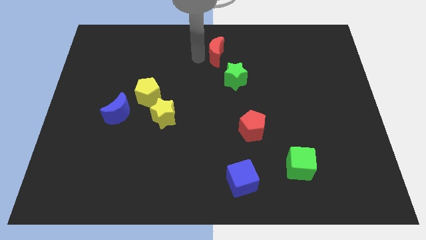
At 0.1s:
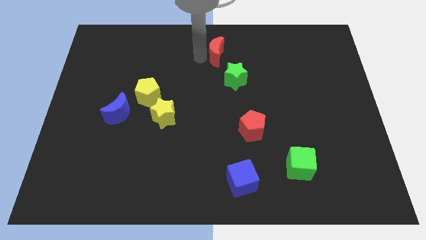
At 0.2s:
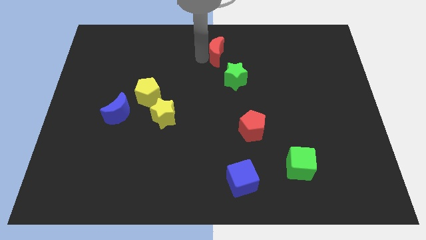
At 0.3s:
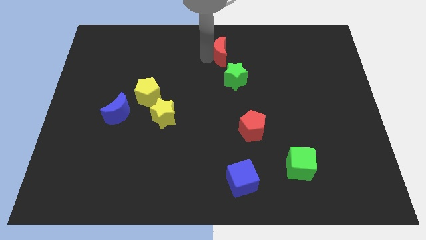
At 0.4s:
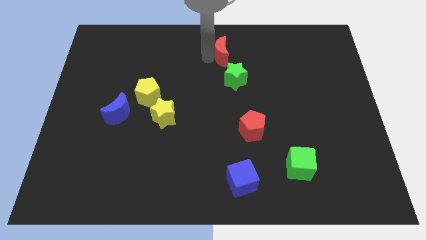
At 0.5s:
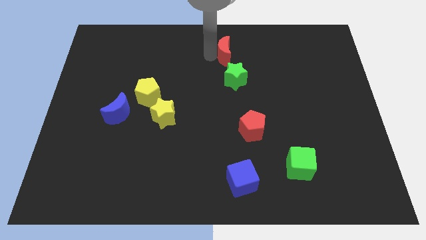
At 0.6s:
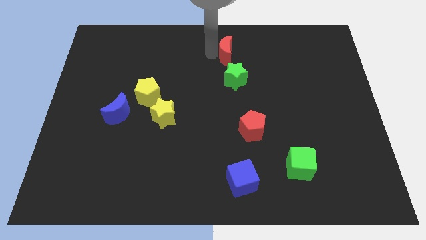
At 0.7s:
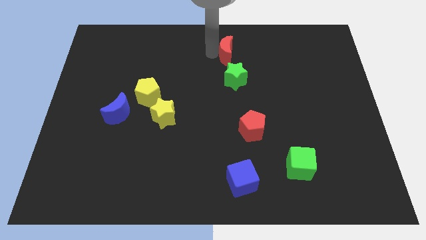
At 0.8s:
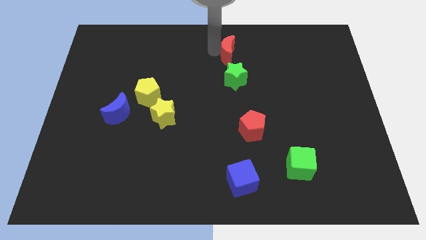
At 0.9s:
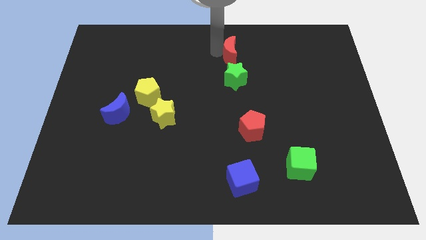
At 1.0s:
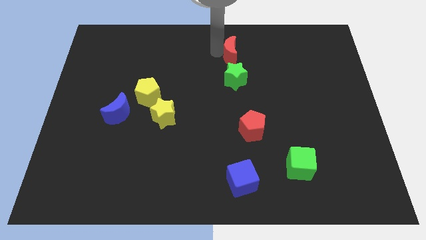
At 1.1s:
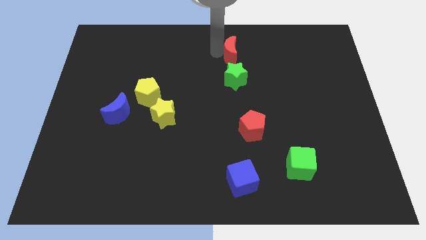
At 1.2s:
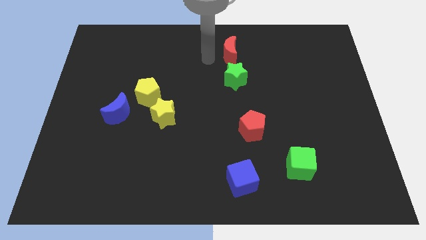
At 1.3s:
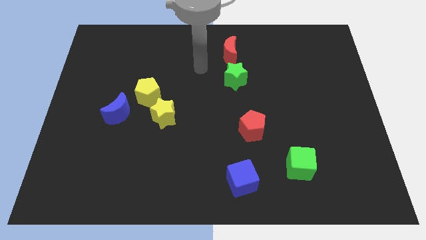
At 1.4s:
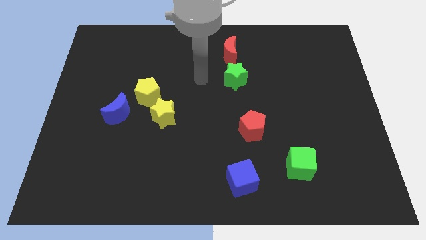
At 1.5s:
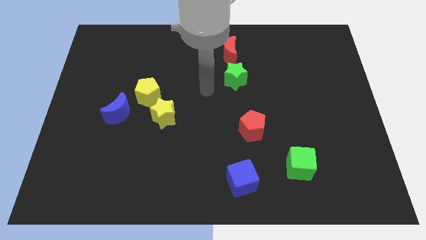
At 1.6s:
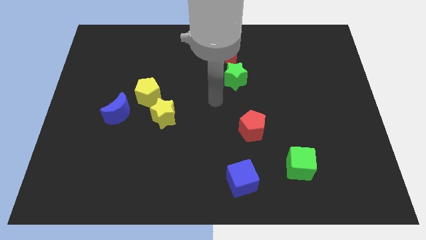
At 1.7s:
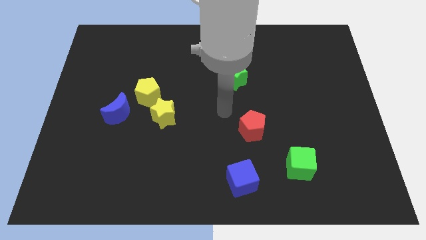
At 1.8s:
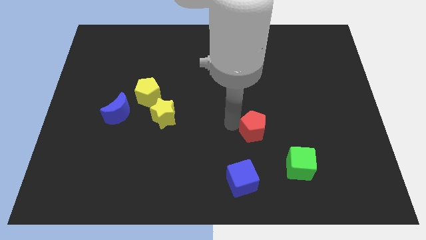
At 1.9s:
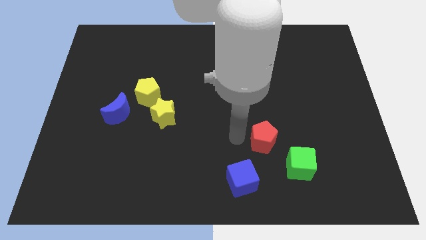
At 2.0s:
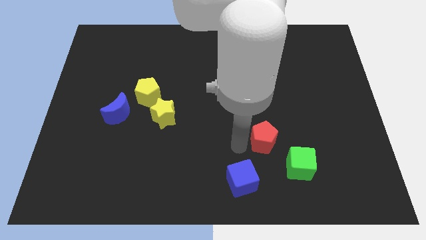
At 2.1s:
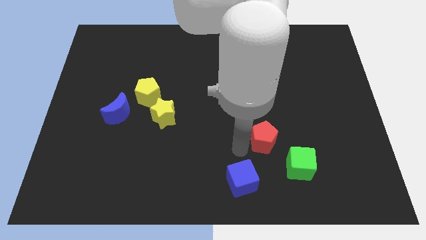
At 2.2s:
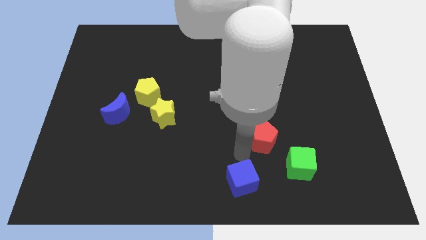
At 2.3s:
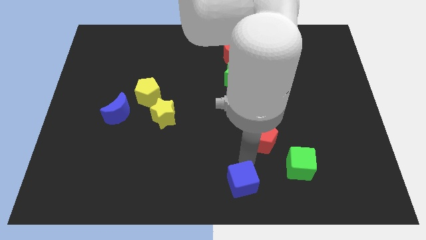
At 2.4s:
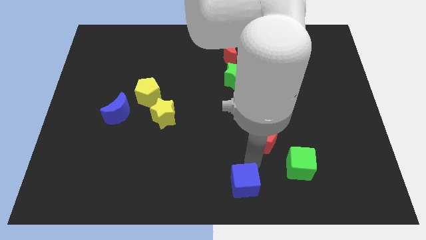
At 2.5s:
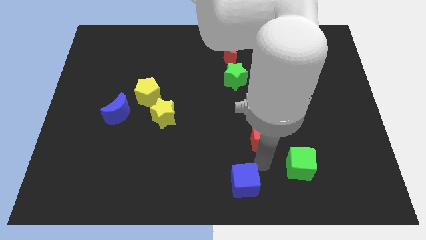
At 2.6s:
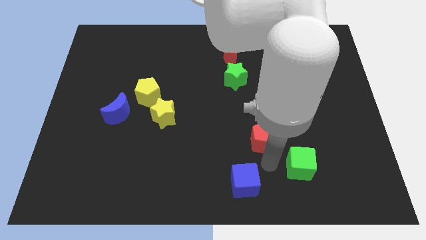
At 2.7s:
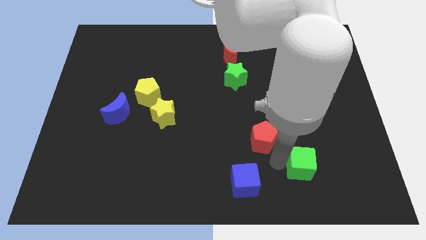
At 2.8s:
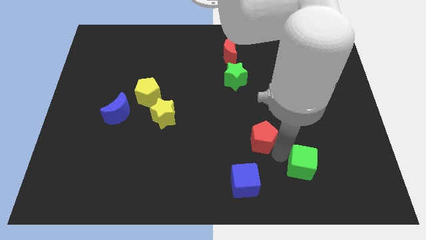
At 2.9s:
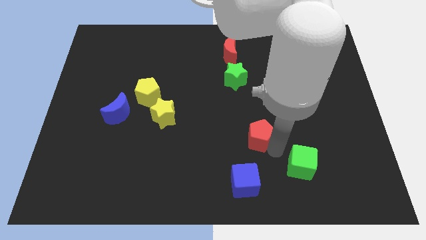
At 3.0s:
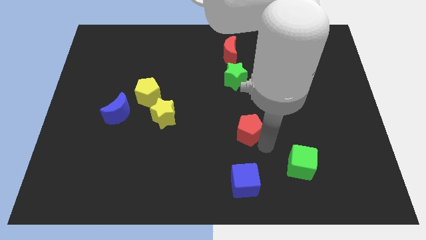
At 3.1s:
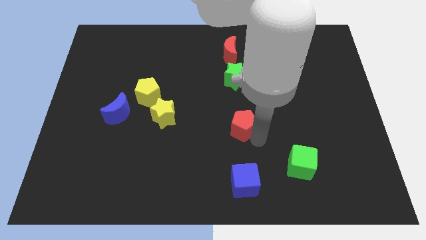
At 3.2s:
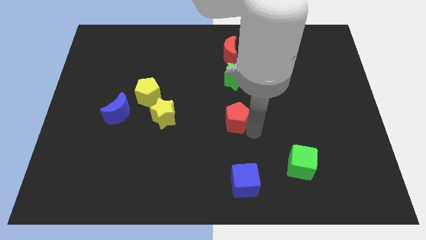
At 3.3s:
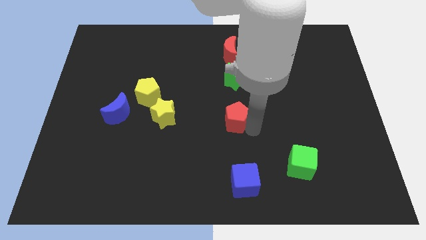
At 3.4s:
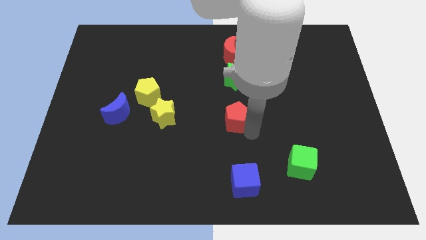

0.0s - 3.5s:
adjust both the red blocks diagonal to green star

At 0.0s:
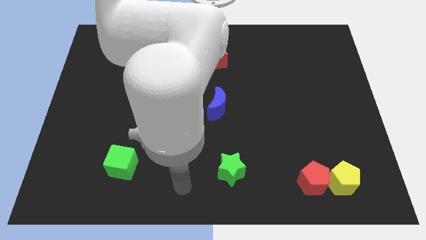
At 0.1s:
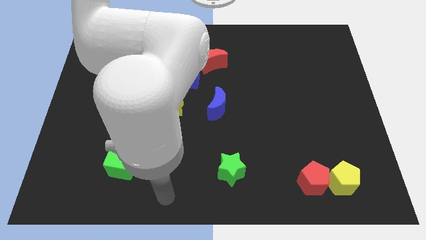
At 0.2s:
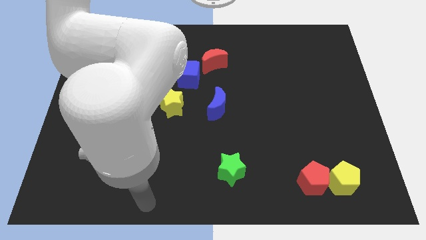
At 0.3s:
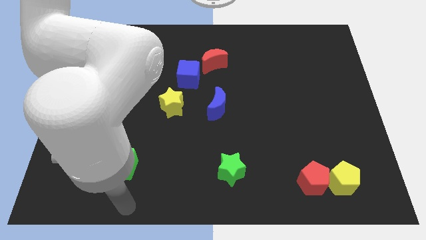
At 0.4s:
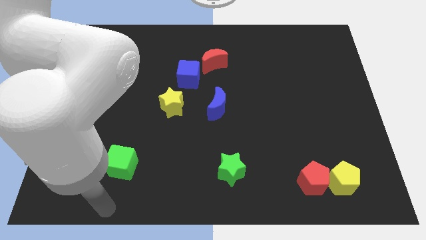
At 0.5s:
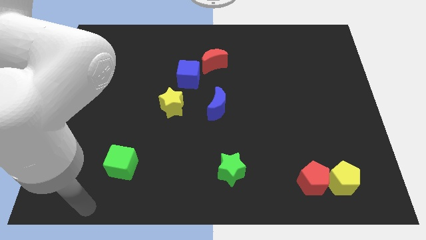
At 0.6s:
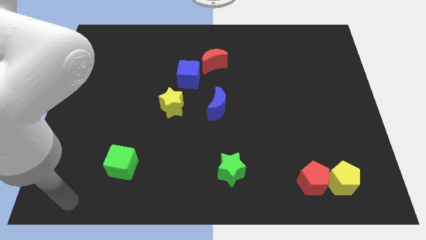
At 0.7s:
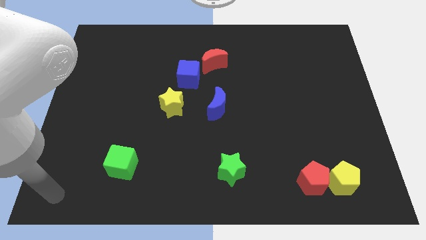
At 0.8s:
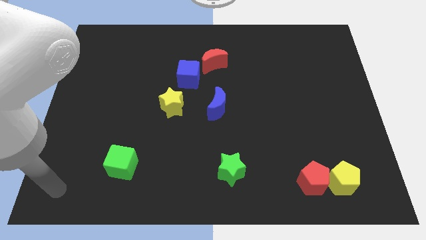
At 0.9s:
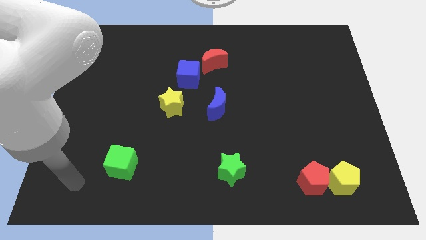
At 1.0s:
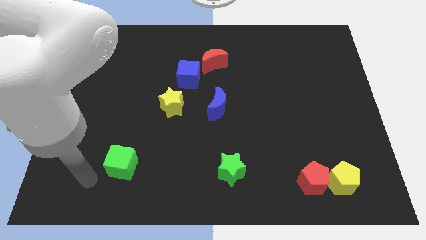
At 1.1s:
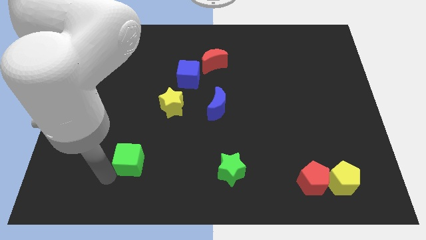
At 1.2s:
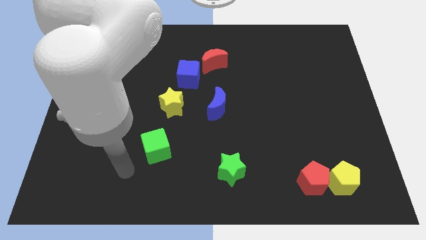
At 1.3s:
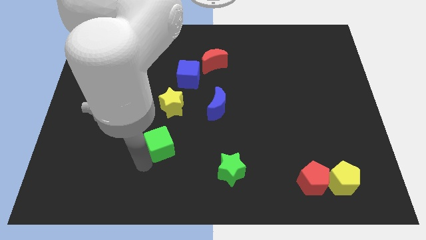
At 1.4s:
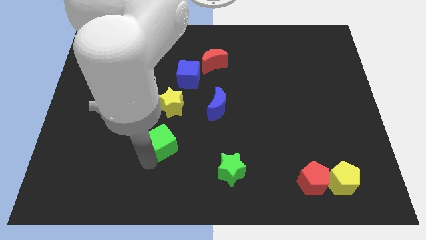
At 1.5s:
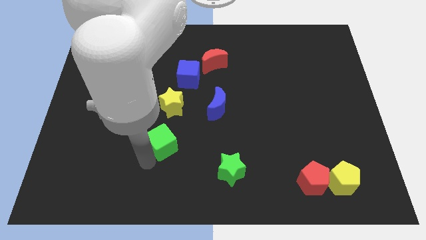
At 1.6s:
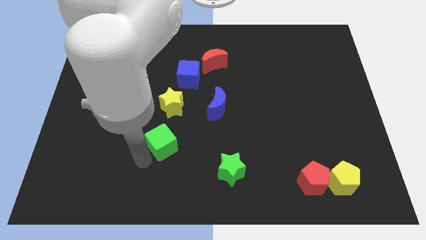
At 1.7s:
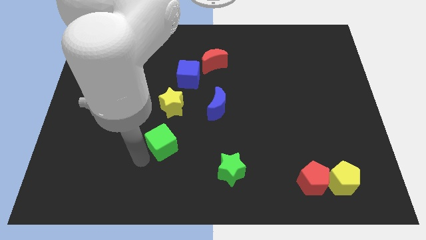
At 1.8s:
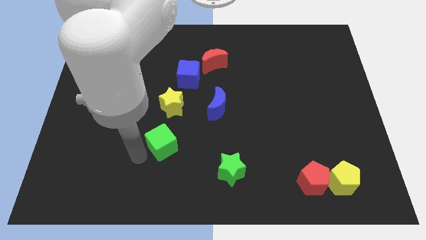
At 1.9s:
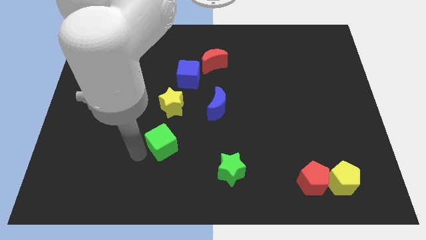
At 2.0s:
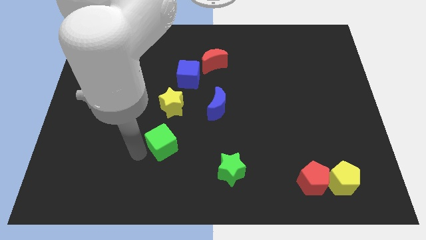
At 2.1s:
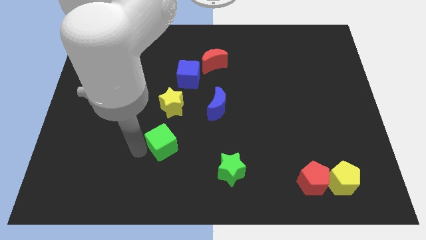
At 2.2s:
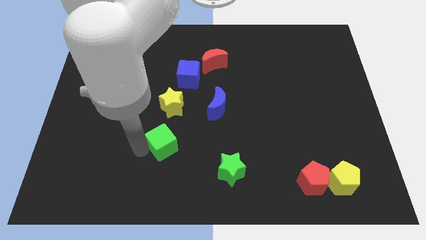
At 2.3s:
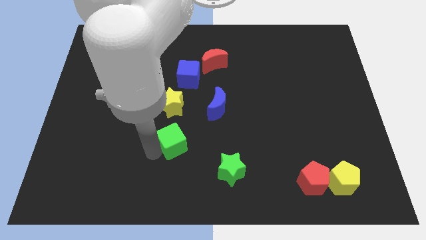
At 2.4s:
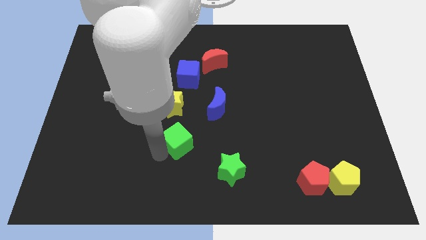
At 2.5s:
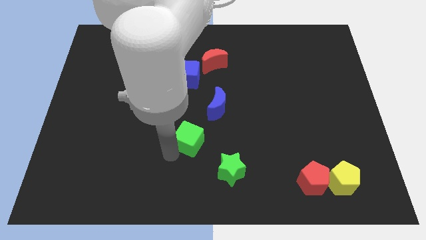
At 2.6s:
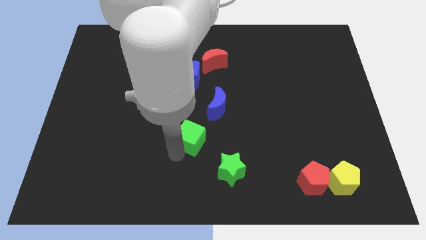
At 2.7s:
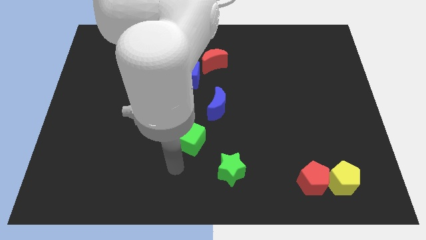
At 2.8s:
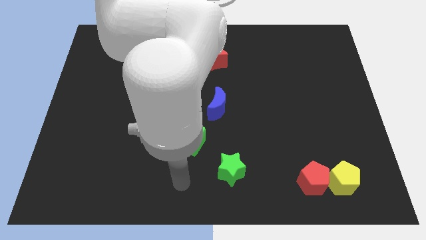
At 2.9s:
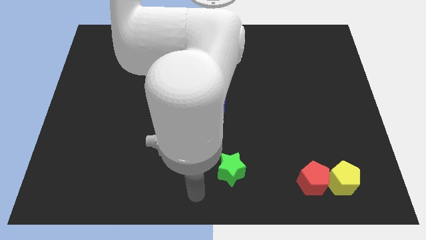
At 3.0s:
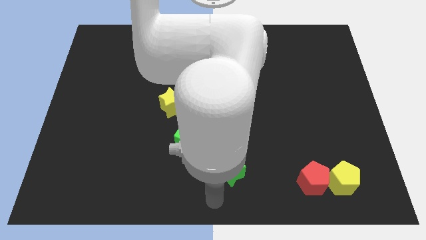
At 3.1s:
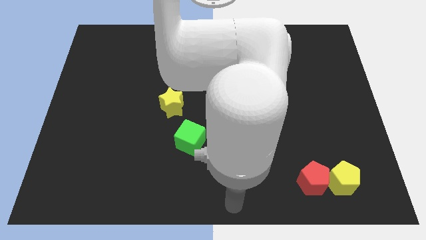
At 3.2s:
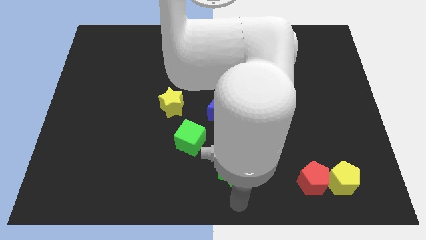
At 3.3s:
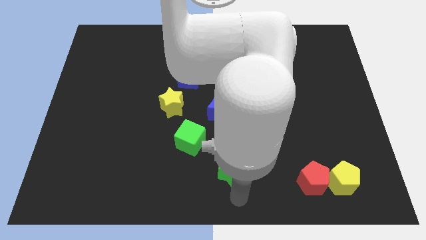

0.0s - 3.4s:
slide the green cube to the bottom right side of the yellow star

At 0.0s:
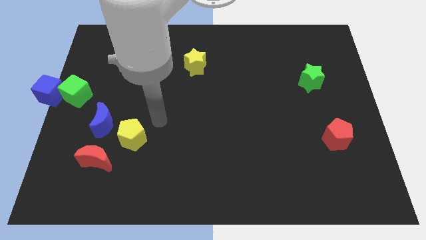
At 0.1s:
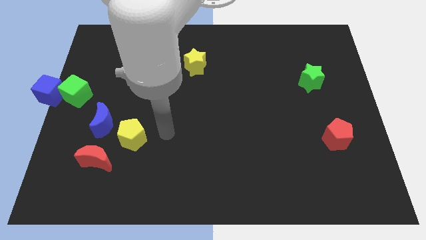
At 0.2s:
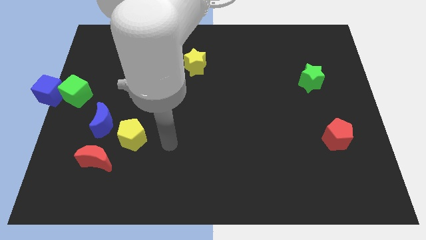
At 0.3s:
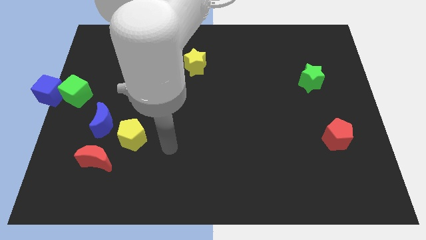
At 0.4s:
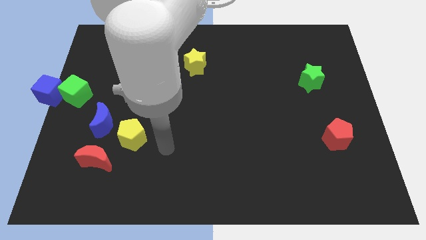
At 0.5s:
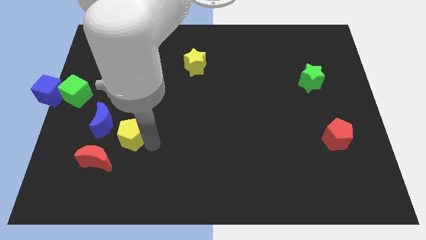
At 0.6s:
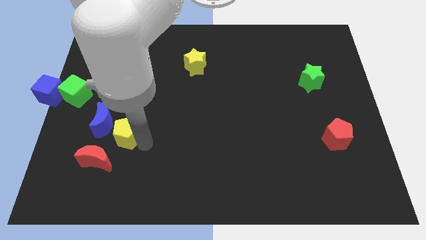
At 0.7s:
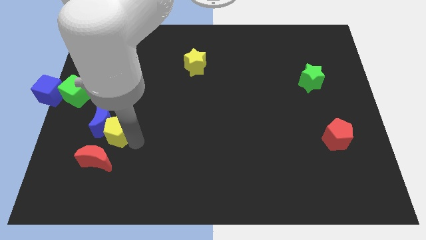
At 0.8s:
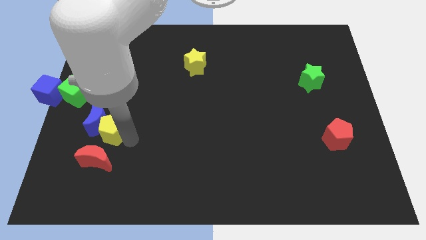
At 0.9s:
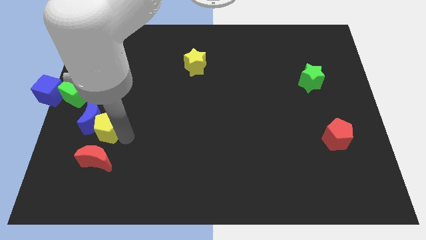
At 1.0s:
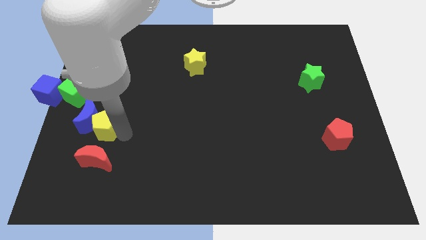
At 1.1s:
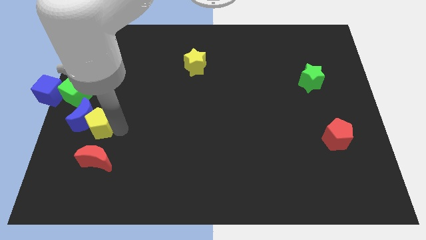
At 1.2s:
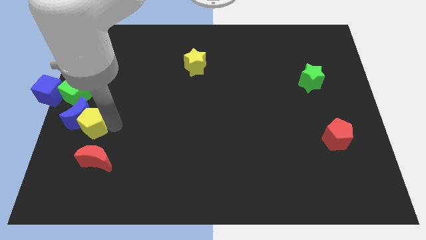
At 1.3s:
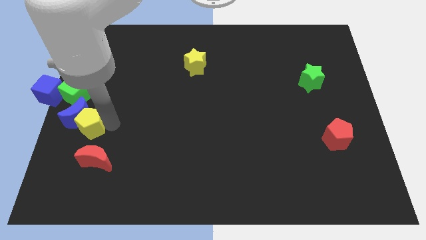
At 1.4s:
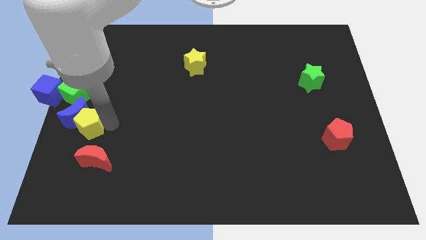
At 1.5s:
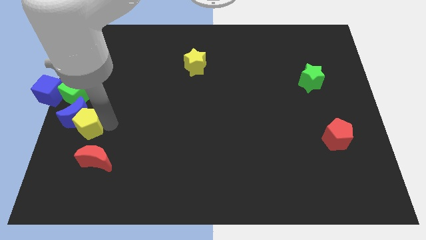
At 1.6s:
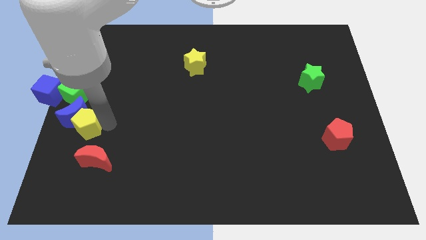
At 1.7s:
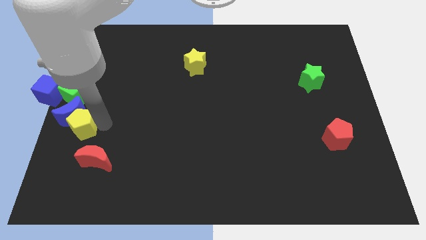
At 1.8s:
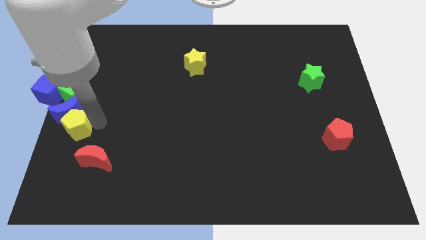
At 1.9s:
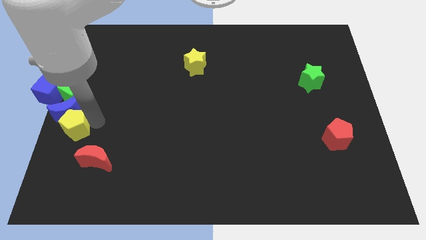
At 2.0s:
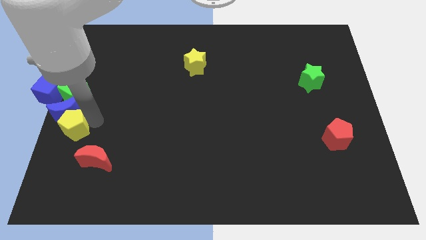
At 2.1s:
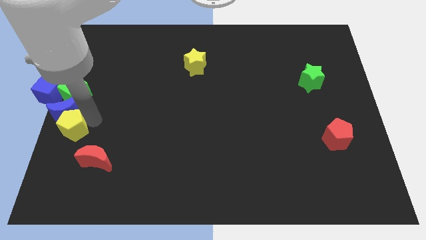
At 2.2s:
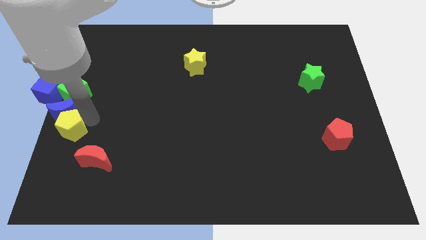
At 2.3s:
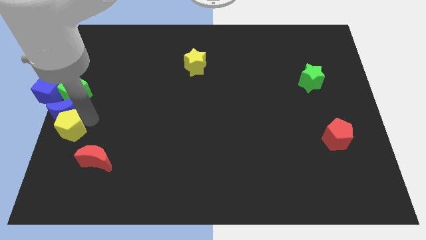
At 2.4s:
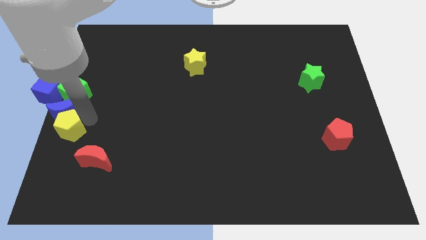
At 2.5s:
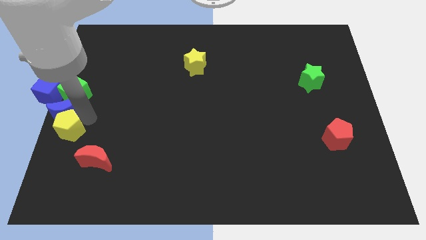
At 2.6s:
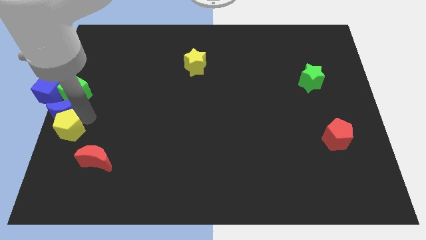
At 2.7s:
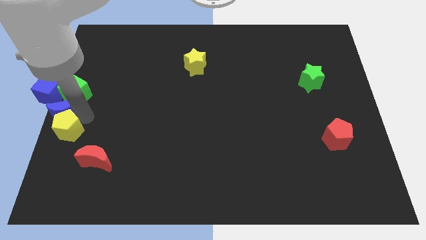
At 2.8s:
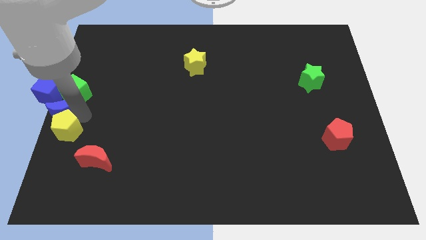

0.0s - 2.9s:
move the yellow pentagon towards a group of block at the left center of the board
